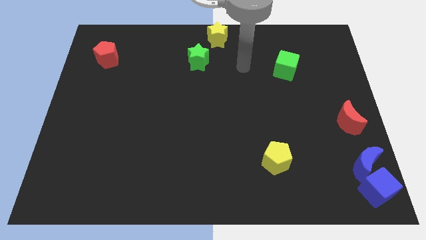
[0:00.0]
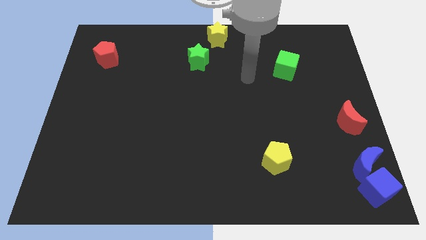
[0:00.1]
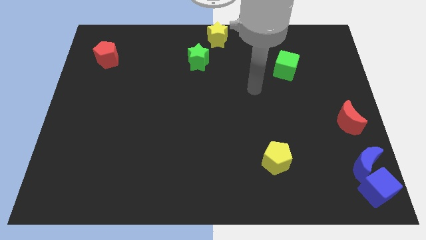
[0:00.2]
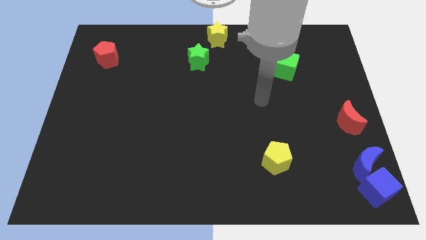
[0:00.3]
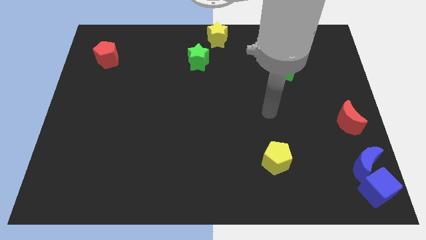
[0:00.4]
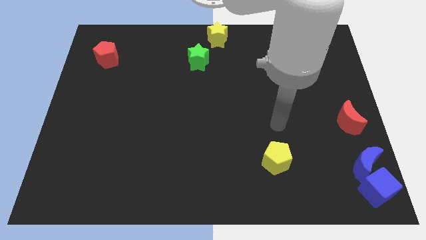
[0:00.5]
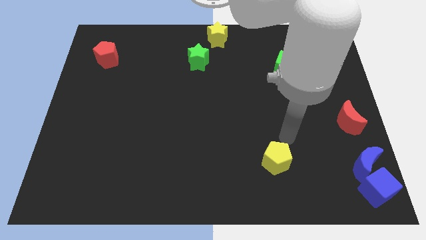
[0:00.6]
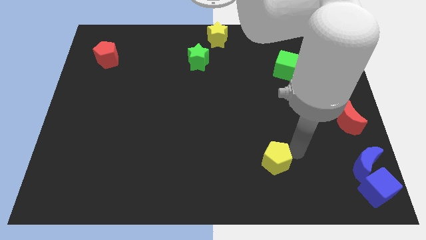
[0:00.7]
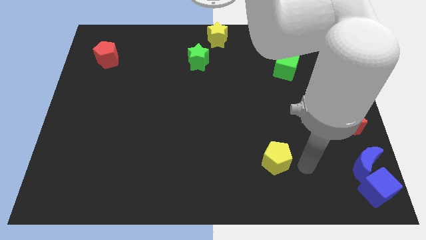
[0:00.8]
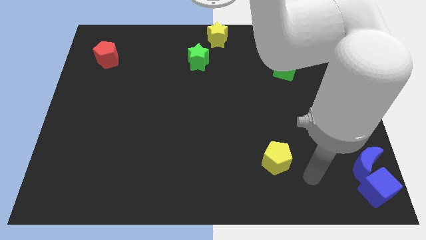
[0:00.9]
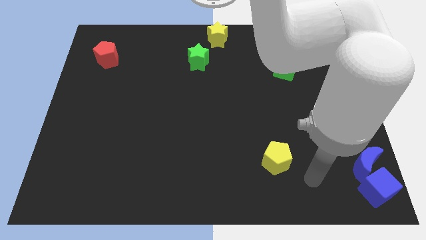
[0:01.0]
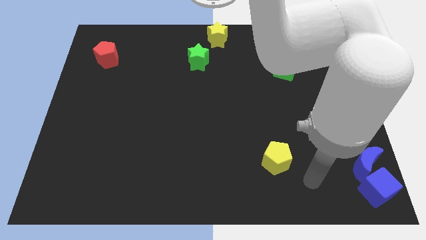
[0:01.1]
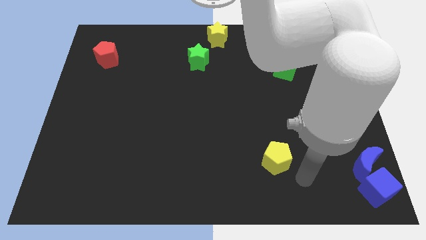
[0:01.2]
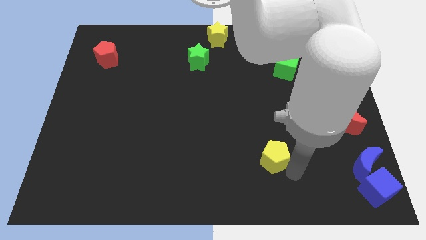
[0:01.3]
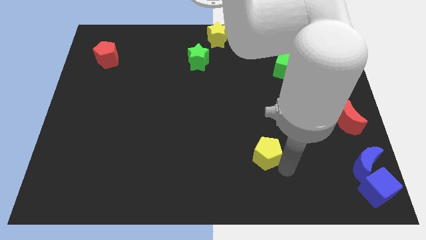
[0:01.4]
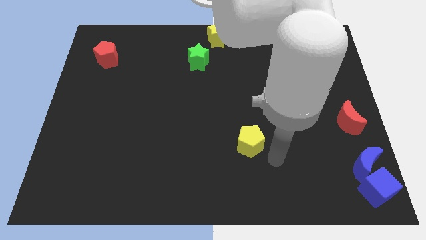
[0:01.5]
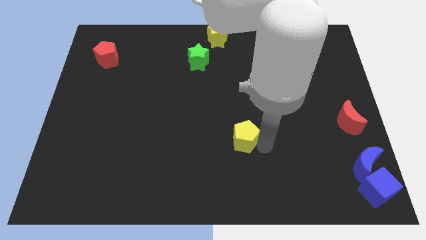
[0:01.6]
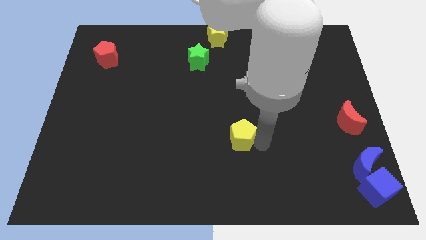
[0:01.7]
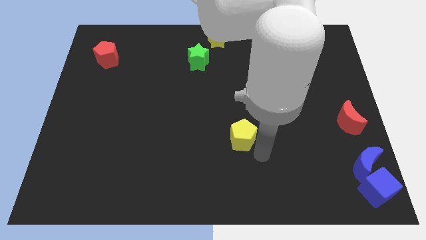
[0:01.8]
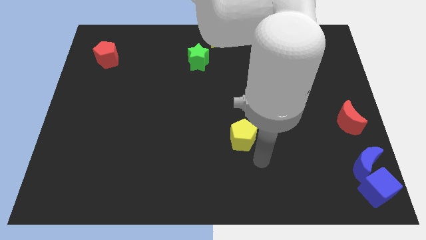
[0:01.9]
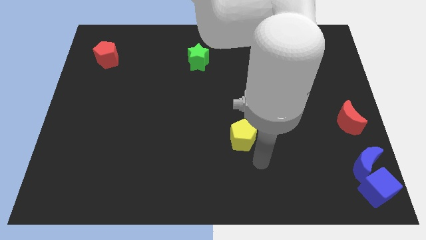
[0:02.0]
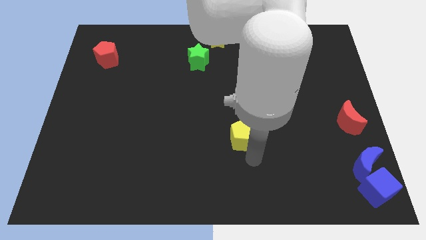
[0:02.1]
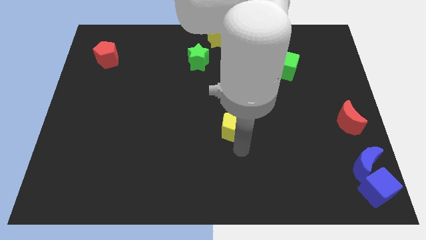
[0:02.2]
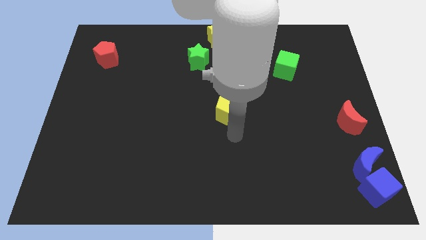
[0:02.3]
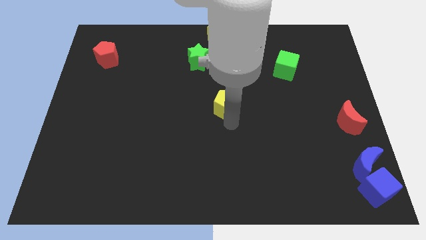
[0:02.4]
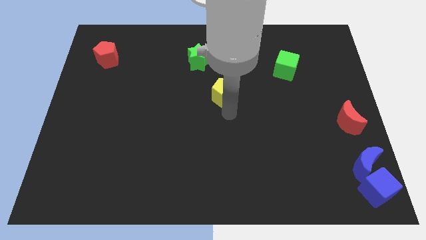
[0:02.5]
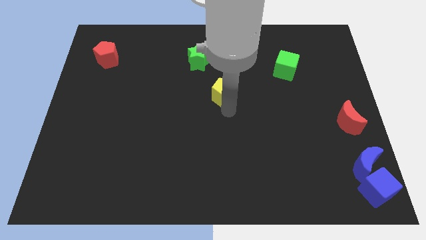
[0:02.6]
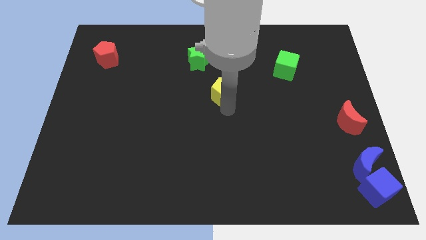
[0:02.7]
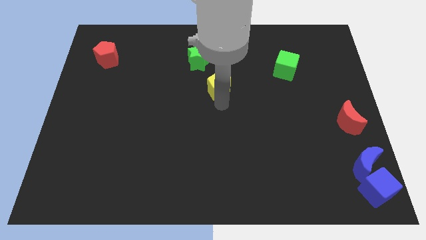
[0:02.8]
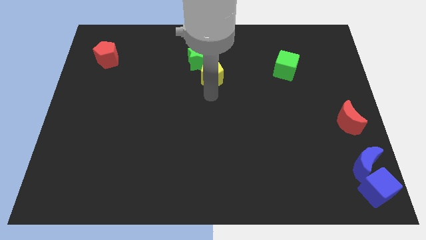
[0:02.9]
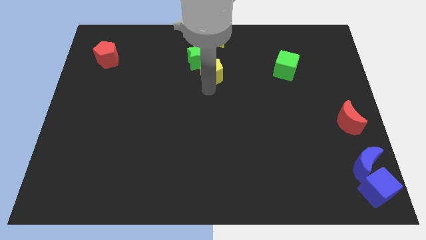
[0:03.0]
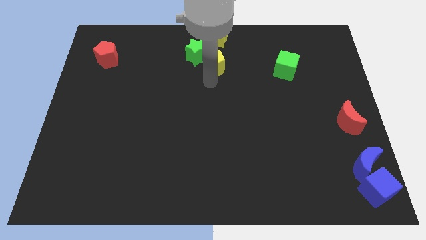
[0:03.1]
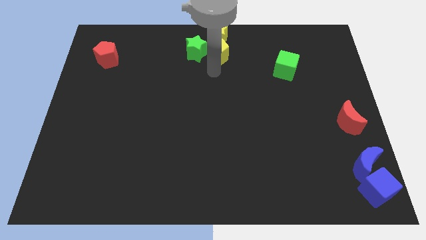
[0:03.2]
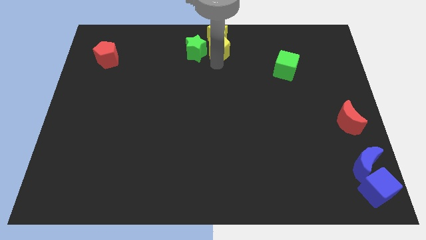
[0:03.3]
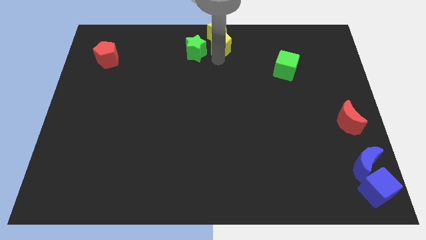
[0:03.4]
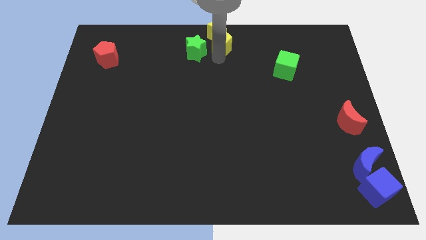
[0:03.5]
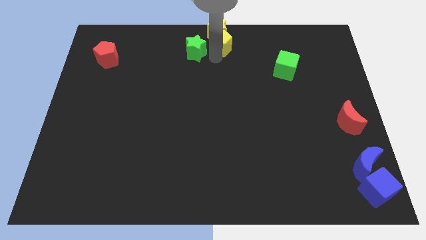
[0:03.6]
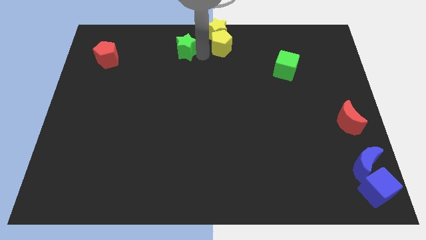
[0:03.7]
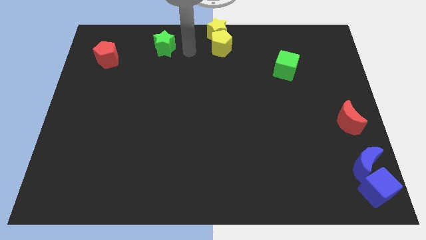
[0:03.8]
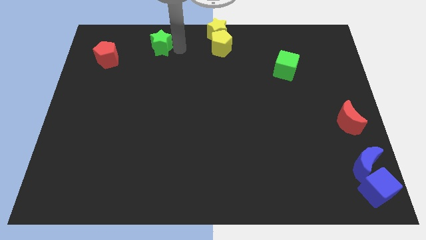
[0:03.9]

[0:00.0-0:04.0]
push yellow pentagon in to yellow star

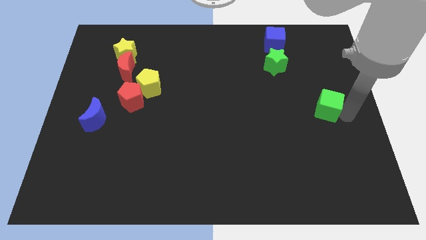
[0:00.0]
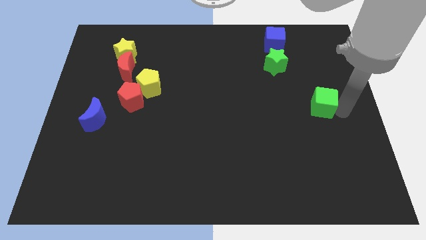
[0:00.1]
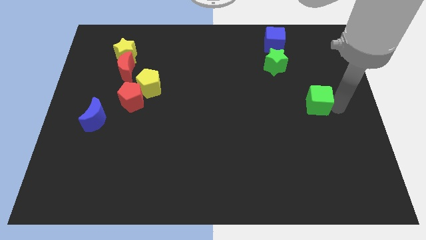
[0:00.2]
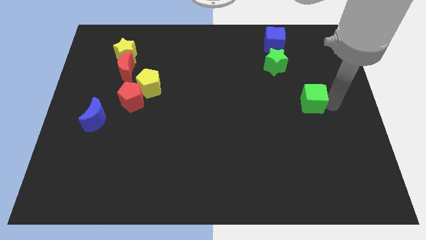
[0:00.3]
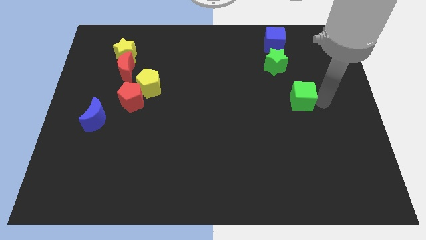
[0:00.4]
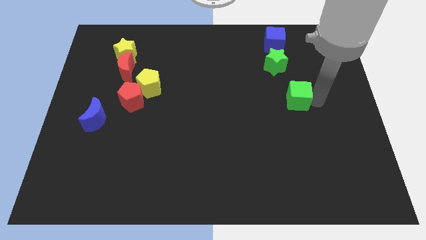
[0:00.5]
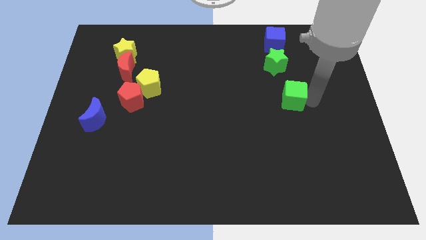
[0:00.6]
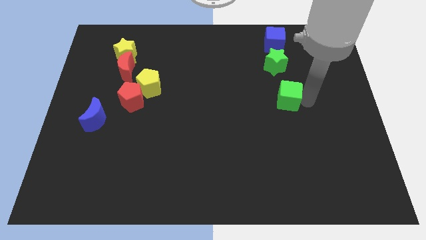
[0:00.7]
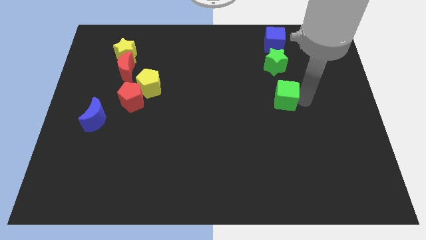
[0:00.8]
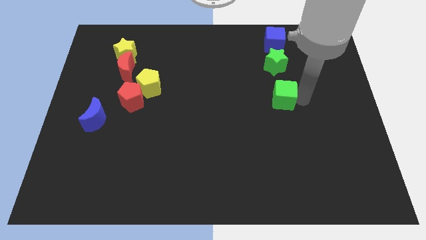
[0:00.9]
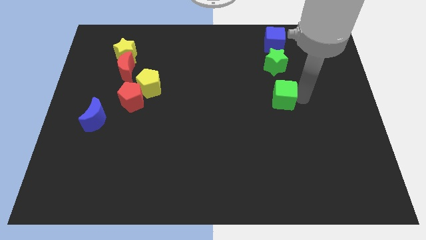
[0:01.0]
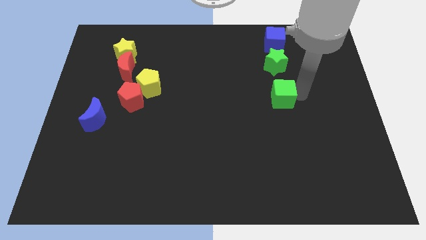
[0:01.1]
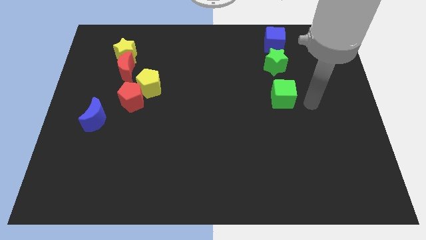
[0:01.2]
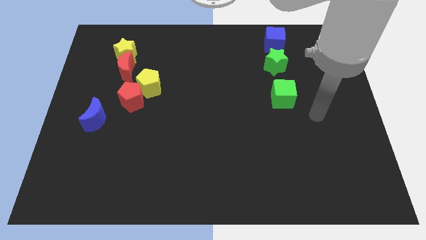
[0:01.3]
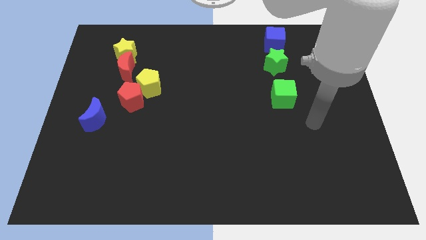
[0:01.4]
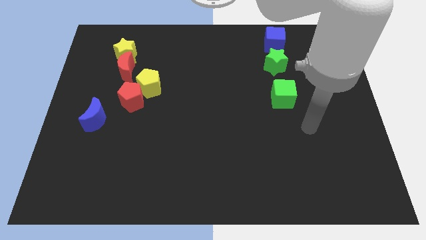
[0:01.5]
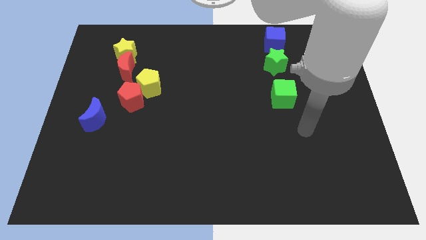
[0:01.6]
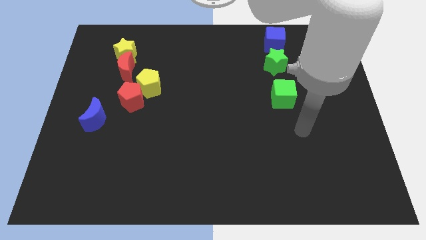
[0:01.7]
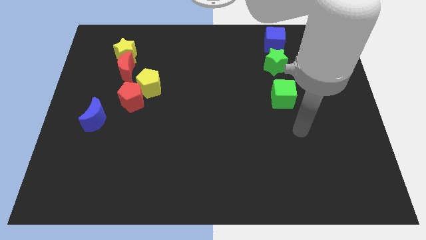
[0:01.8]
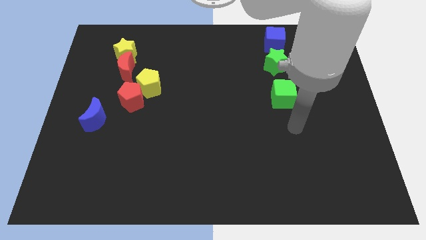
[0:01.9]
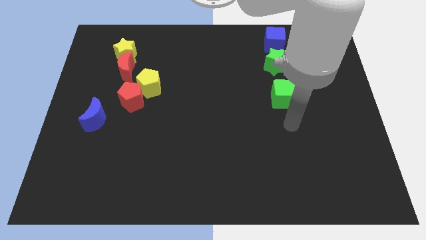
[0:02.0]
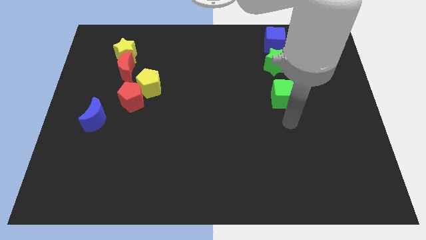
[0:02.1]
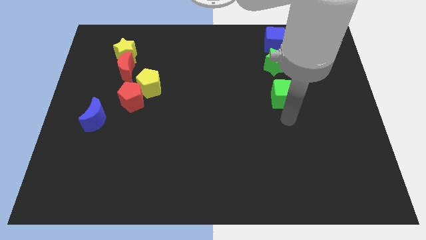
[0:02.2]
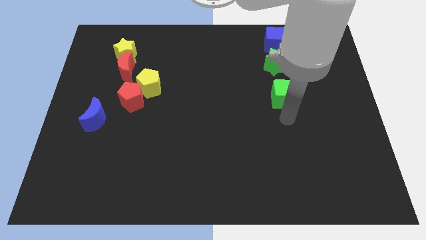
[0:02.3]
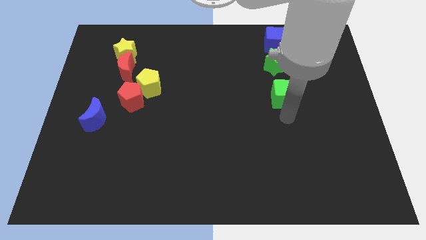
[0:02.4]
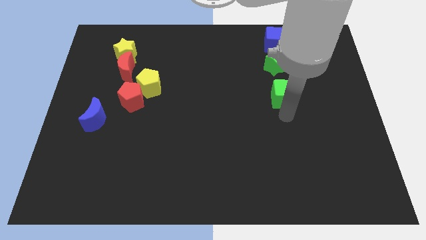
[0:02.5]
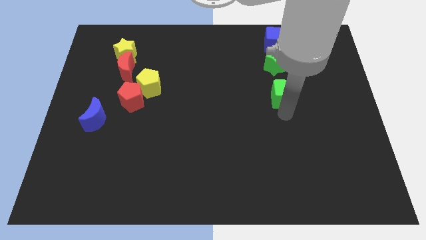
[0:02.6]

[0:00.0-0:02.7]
place the green cube down to the green star

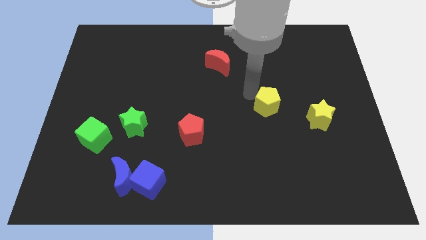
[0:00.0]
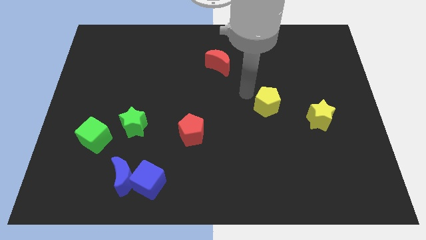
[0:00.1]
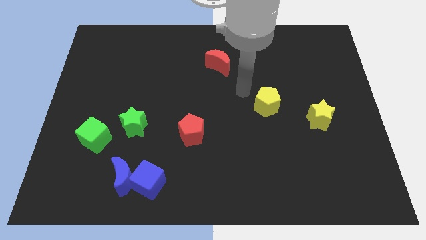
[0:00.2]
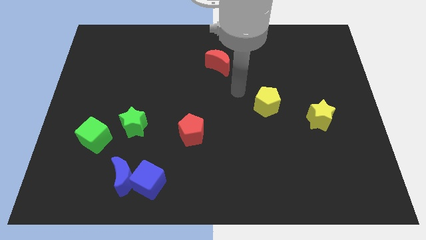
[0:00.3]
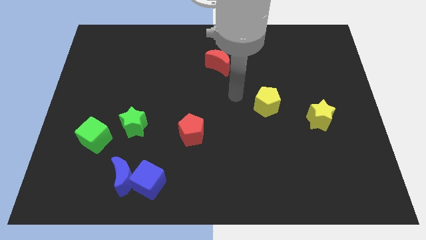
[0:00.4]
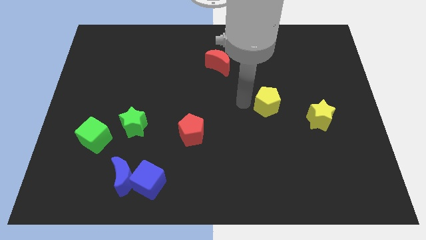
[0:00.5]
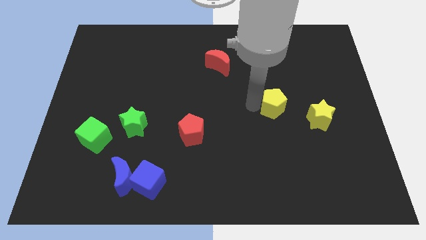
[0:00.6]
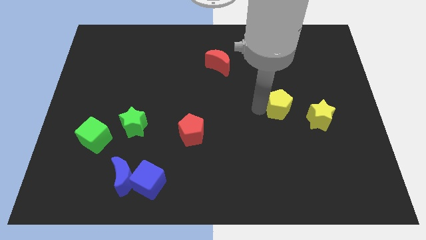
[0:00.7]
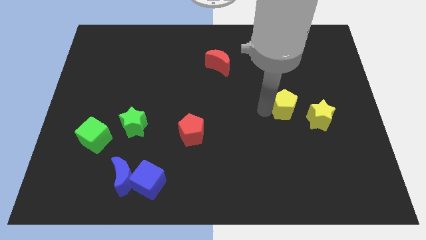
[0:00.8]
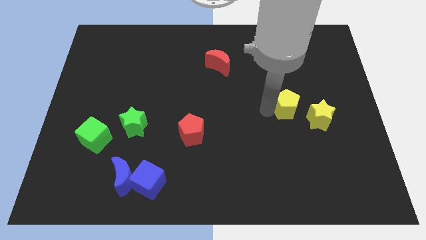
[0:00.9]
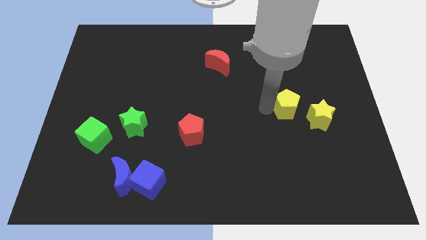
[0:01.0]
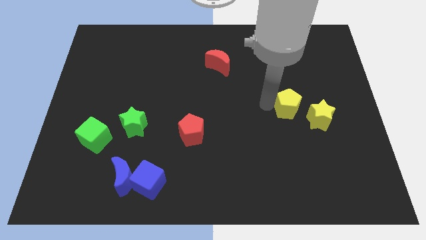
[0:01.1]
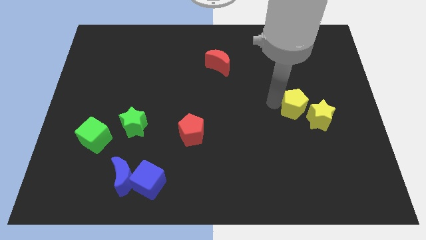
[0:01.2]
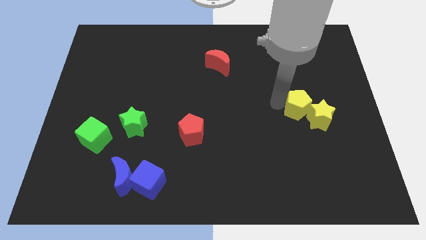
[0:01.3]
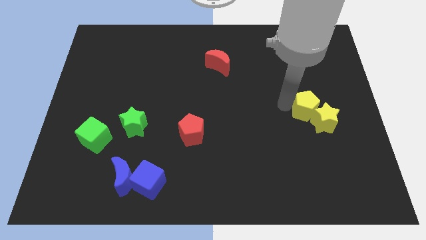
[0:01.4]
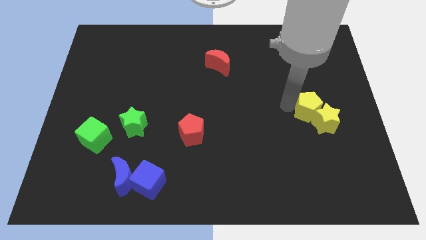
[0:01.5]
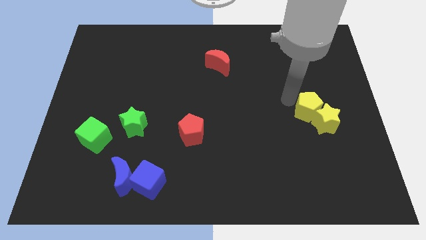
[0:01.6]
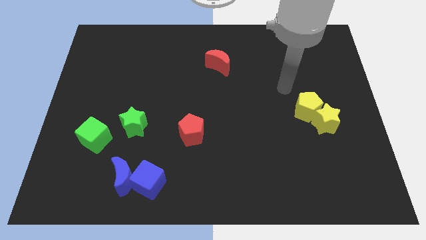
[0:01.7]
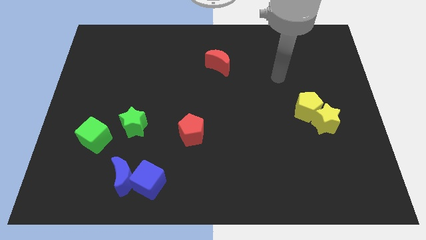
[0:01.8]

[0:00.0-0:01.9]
slide the yellow pentagon into the yellow star

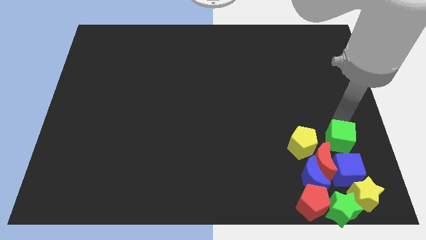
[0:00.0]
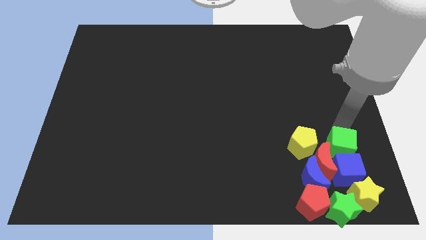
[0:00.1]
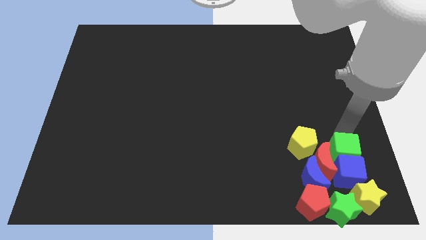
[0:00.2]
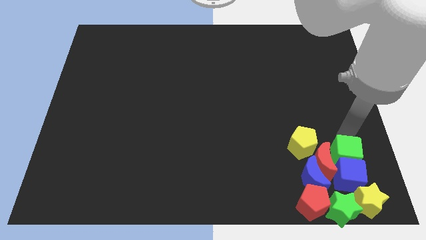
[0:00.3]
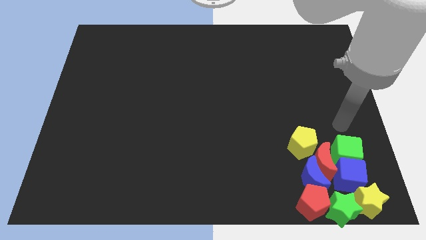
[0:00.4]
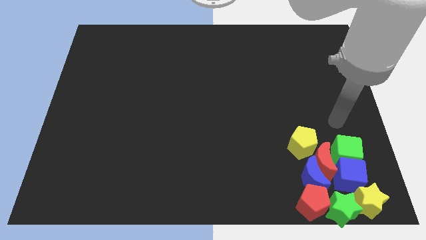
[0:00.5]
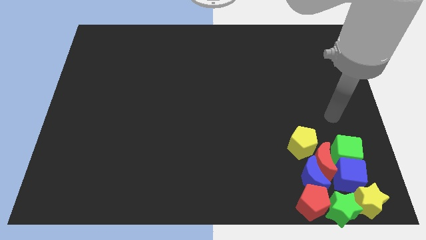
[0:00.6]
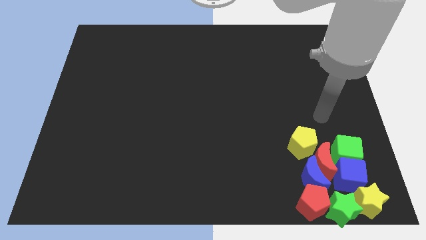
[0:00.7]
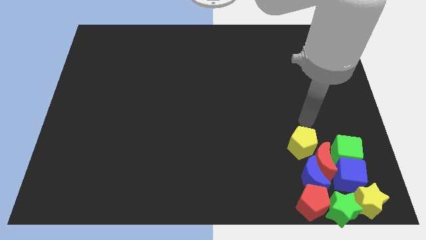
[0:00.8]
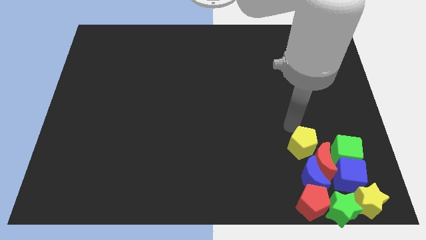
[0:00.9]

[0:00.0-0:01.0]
push the green cube into the blue cube
